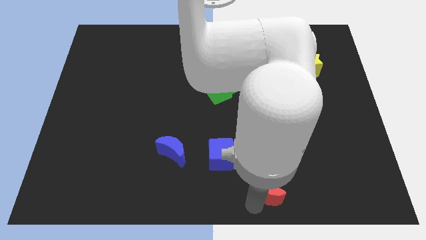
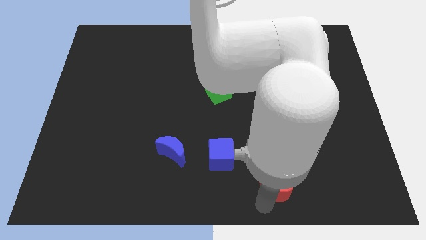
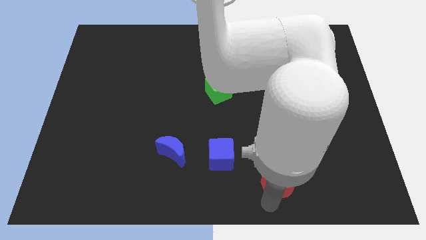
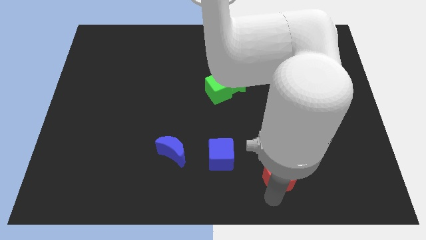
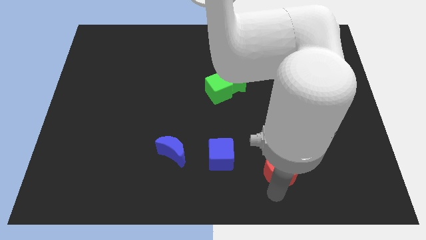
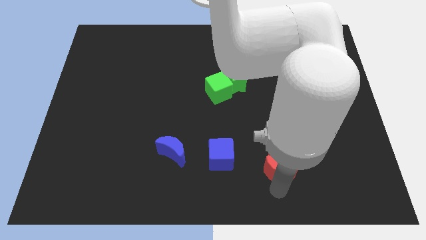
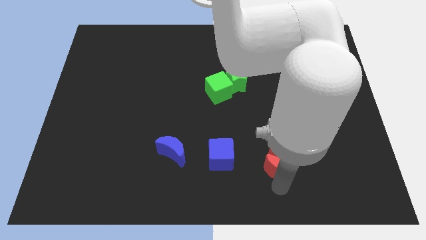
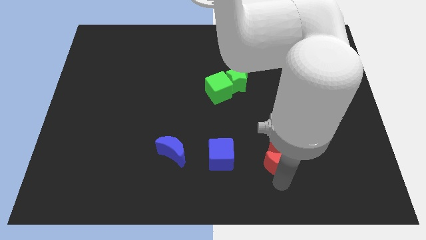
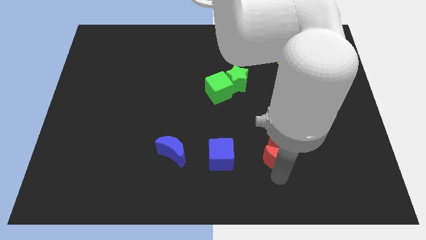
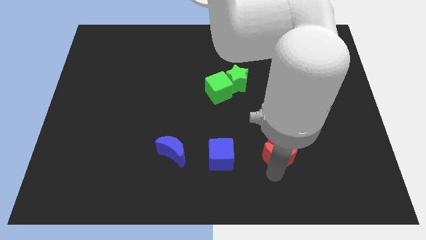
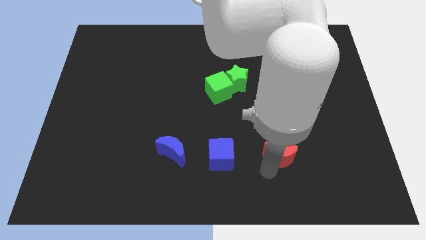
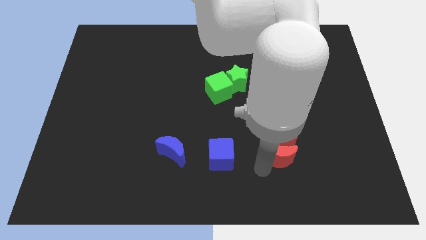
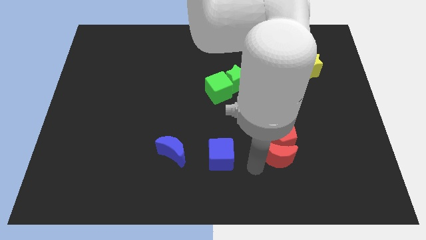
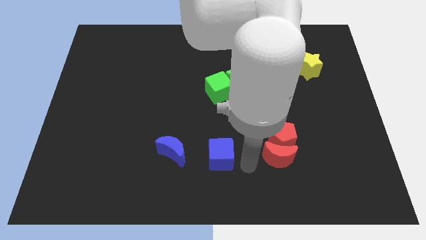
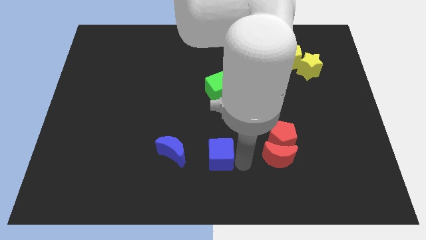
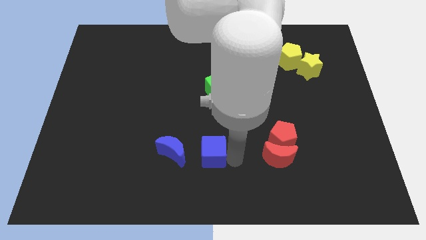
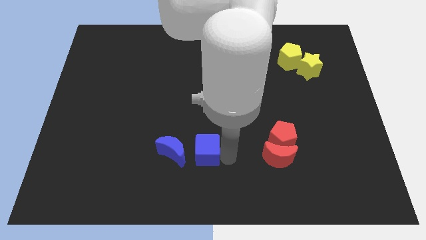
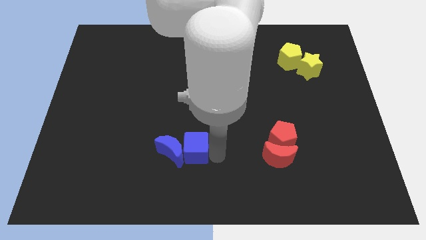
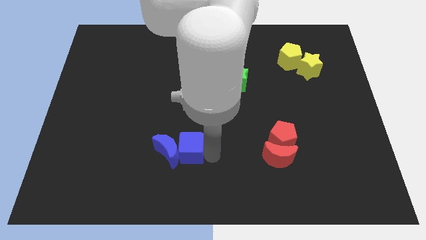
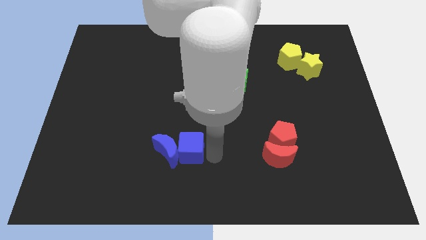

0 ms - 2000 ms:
place the red and blue blocks together

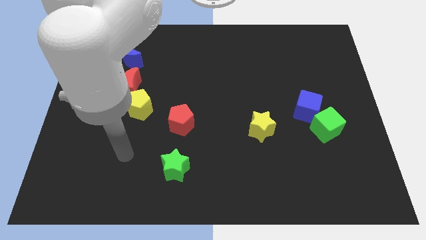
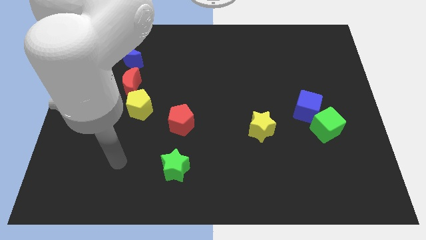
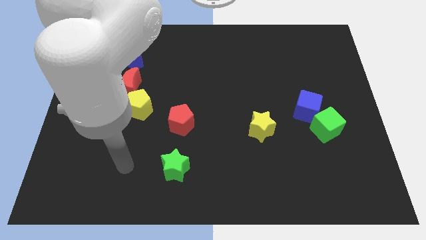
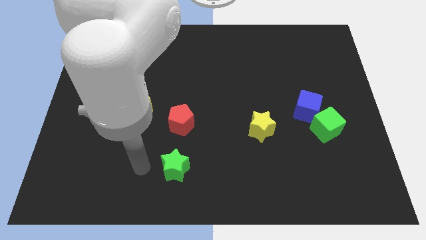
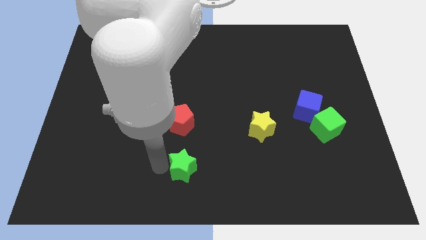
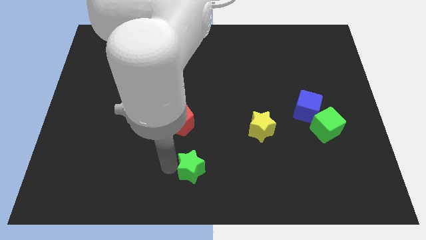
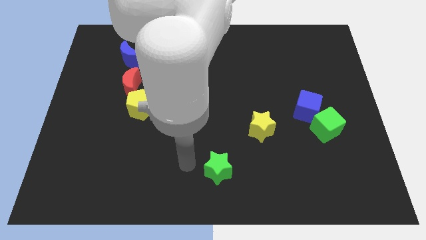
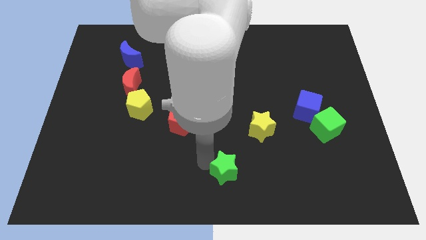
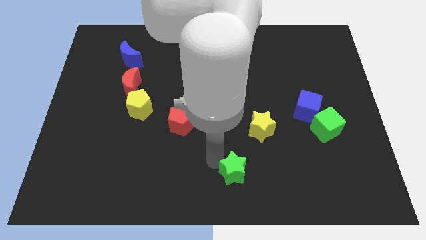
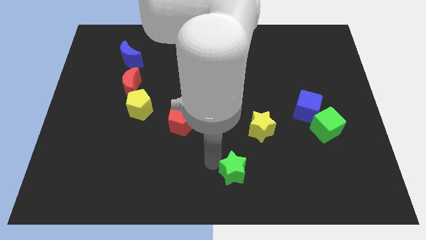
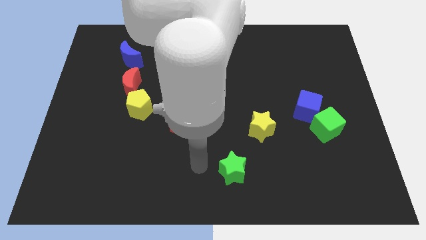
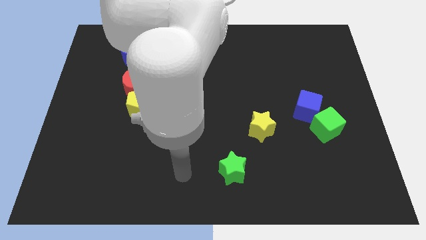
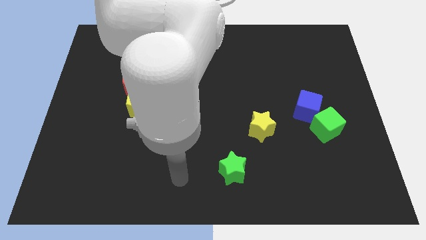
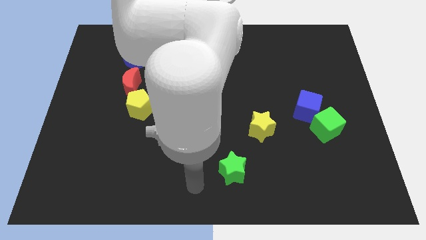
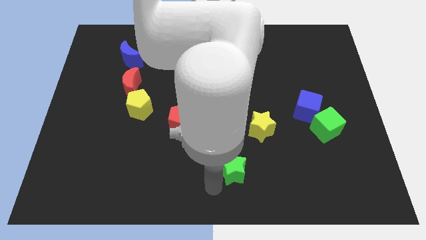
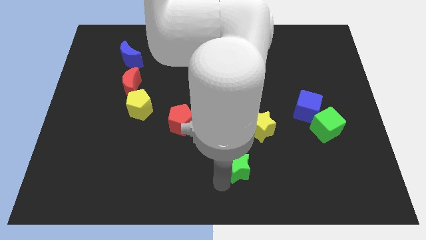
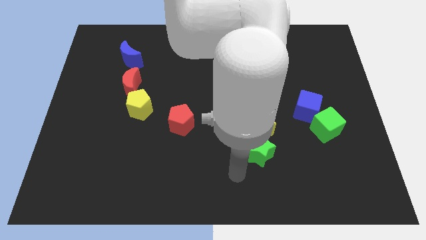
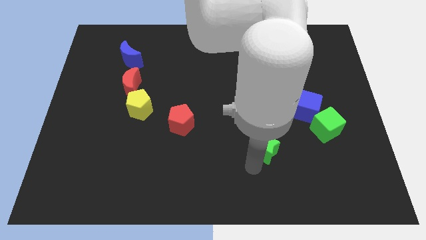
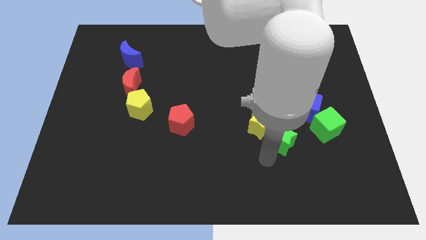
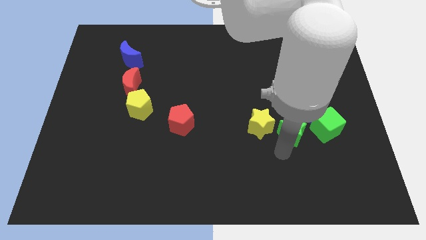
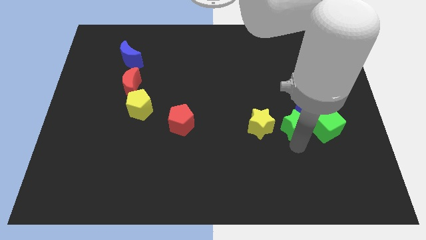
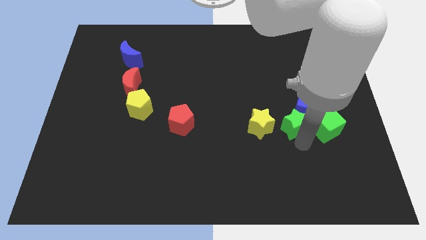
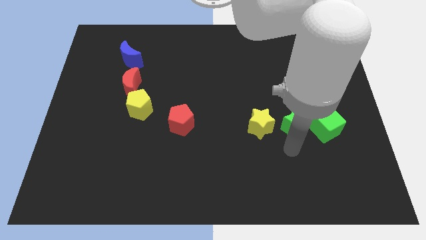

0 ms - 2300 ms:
place green star left beside green cube

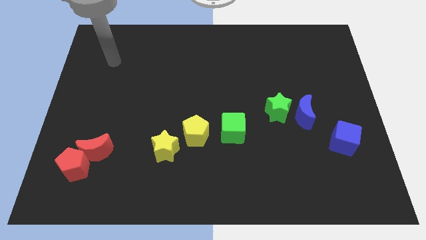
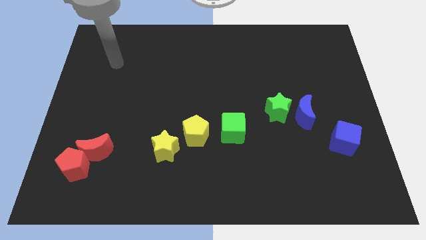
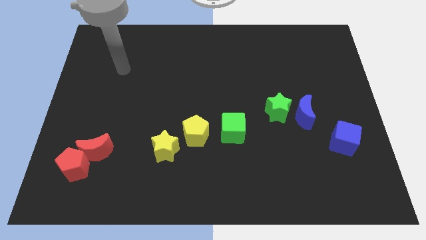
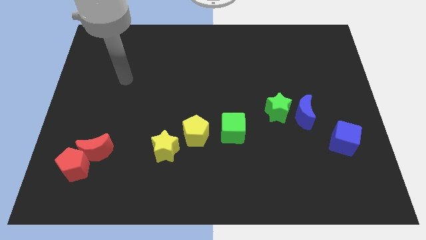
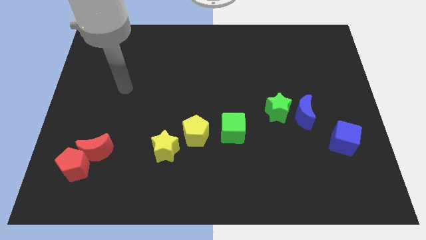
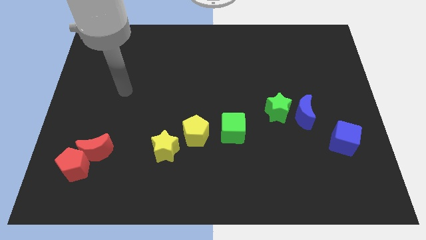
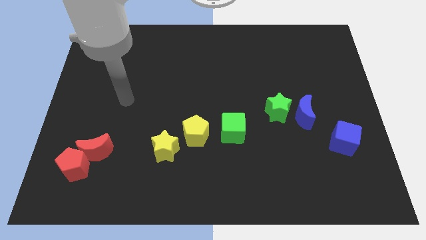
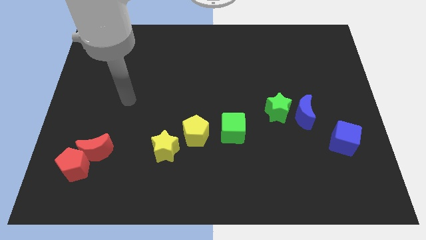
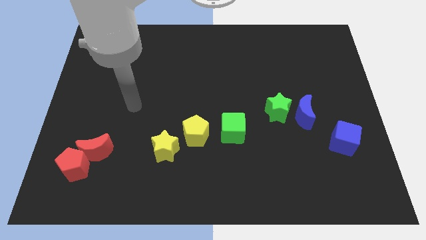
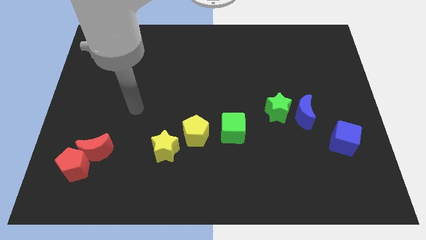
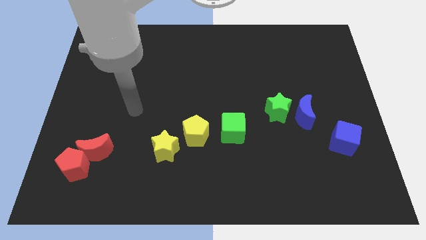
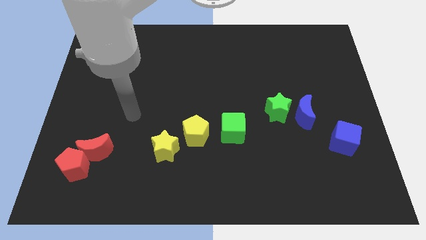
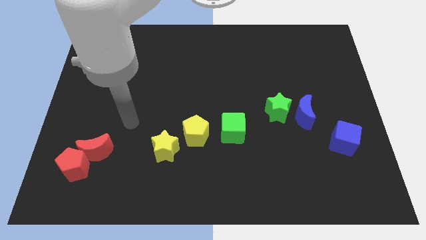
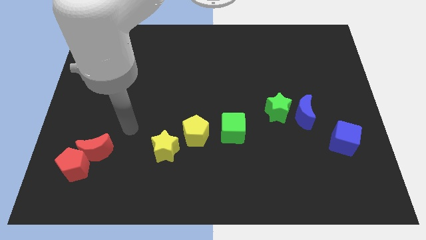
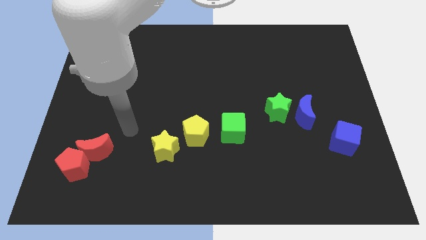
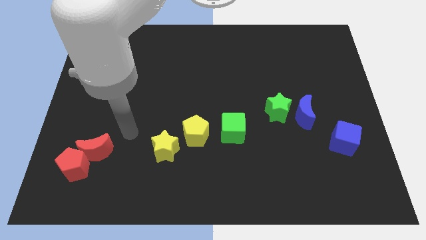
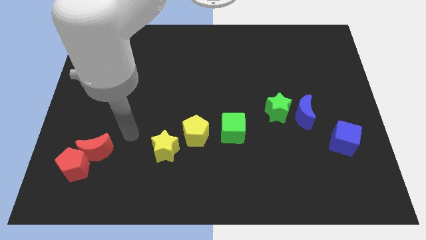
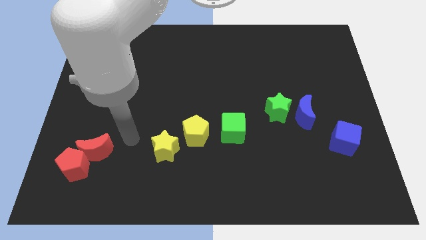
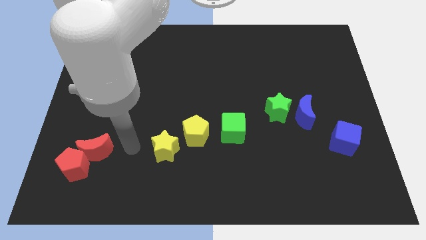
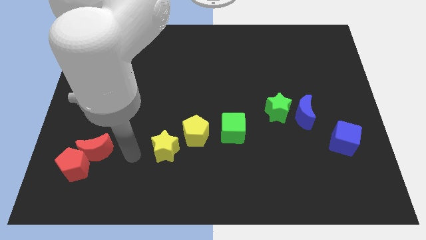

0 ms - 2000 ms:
place your hand parallel left to the yellow star

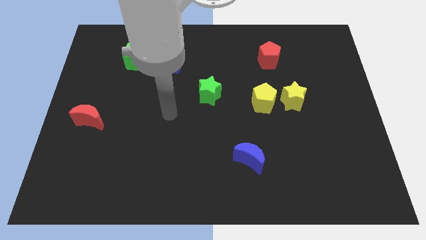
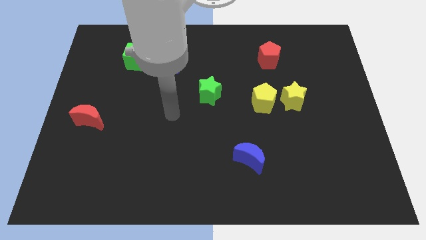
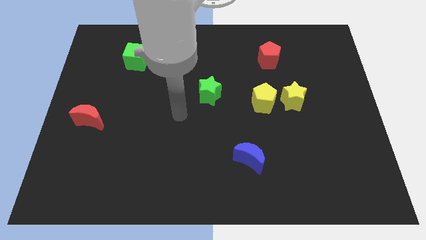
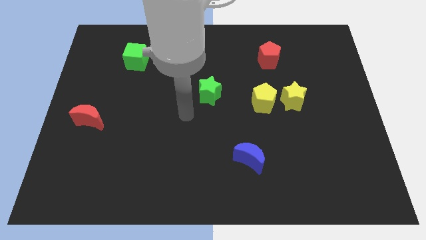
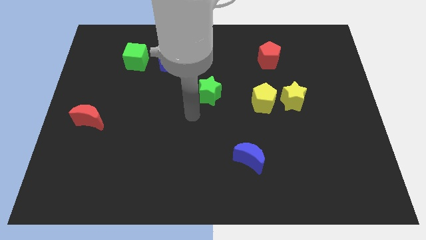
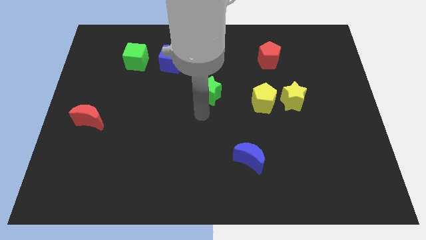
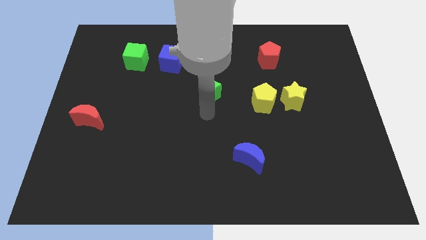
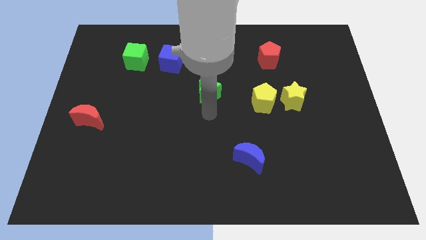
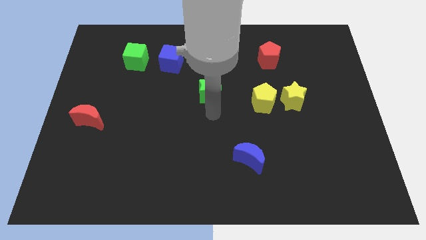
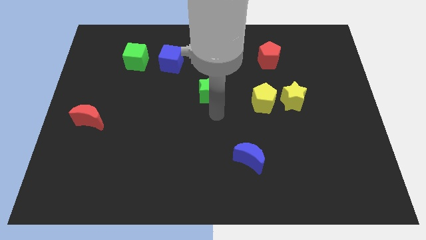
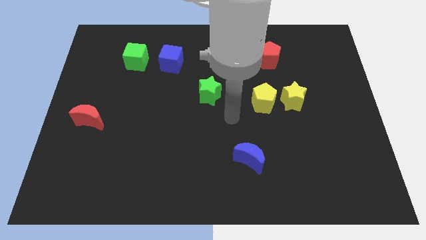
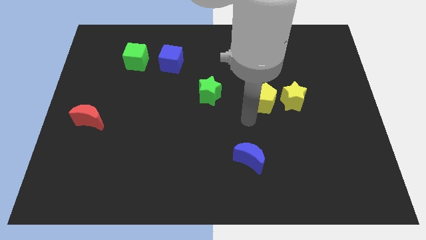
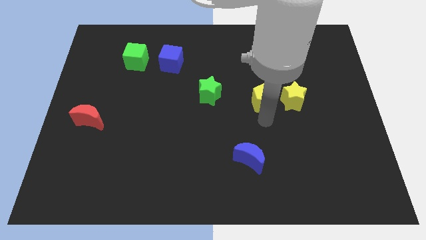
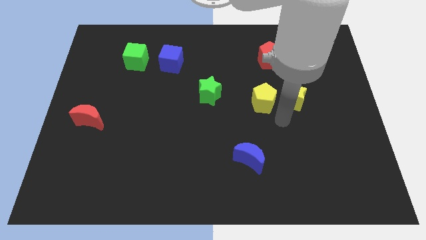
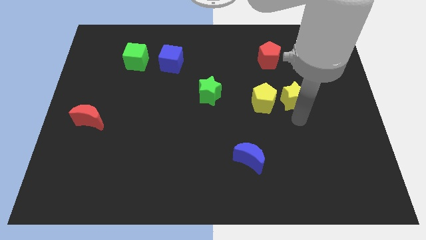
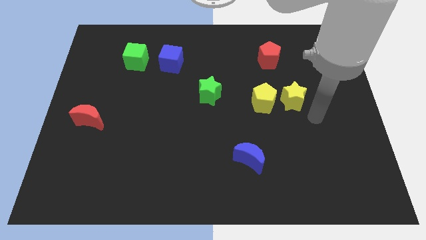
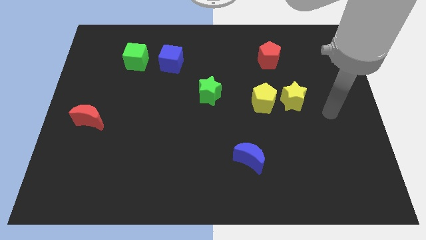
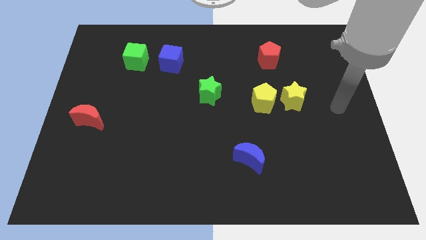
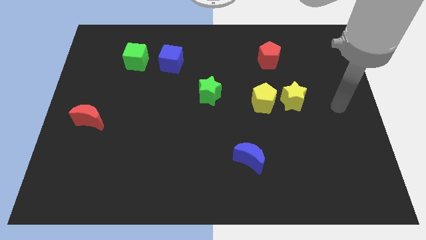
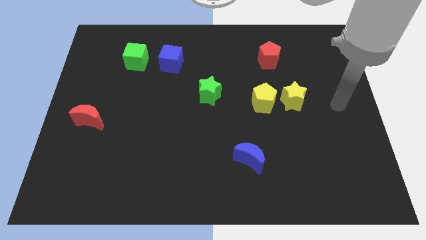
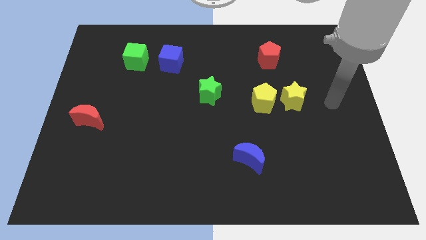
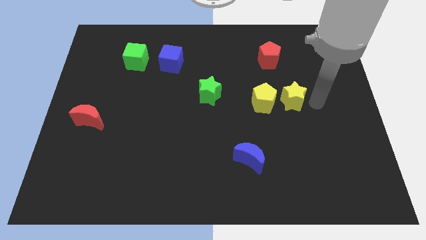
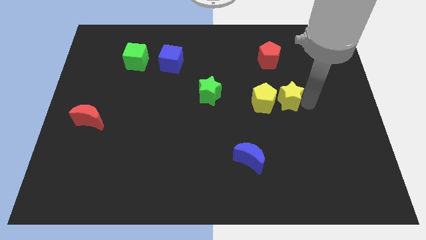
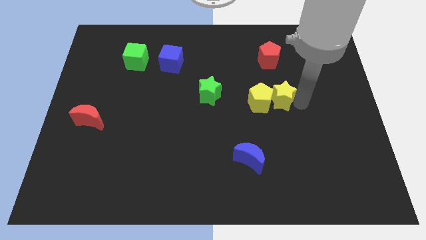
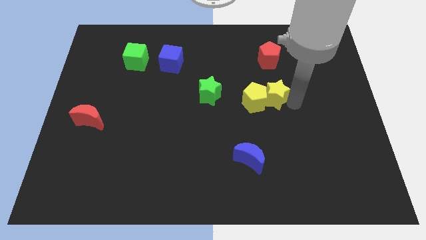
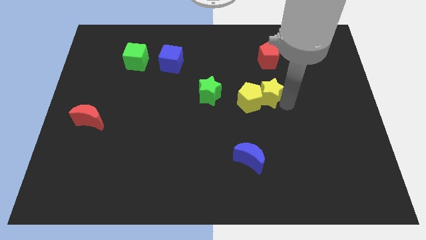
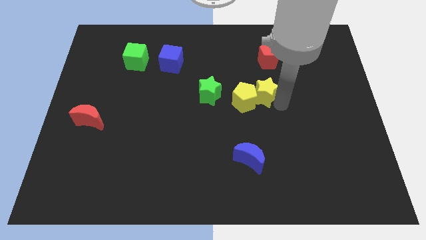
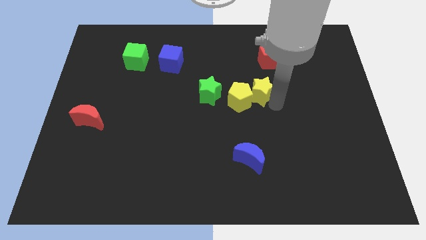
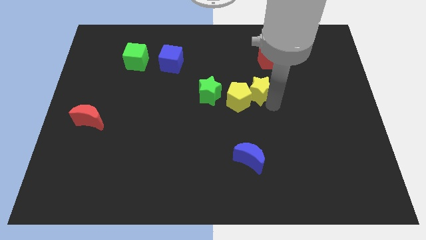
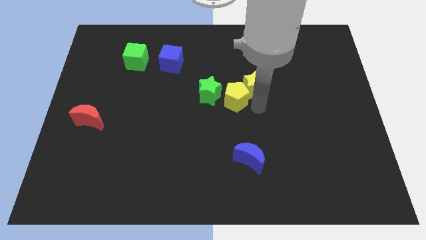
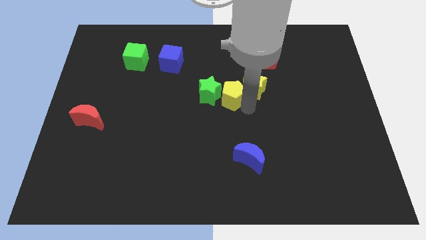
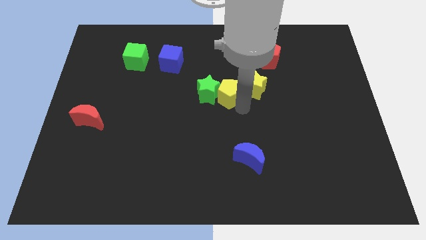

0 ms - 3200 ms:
move your arm and push the yellow star into yellow pentagon
